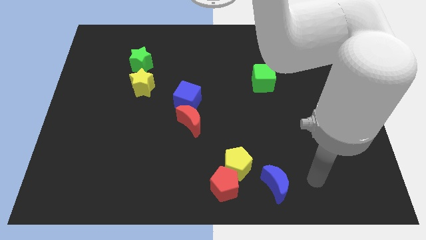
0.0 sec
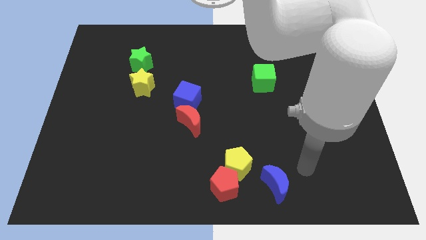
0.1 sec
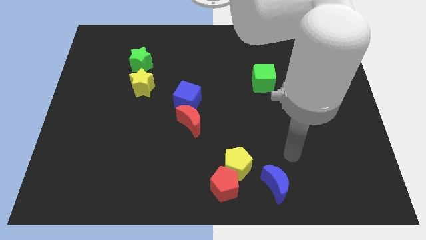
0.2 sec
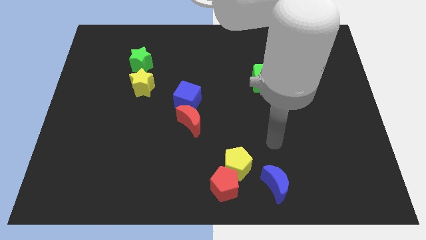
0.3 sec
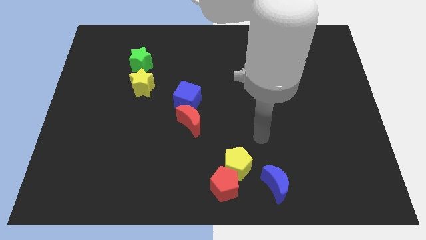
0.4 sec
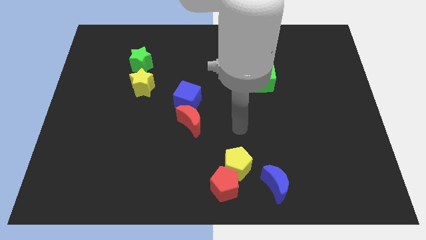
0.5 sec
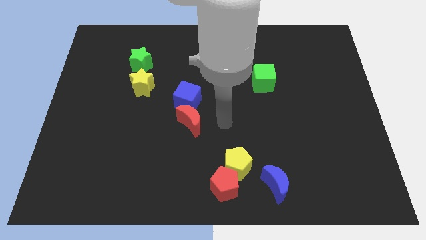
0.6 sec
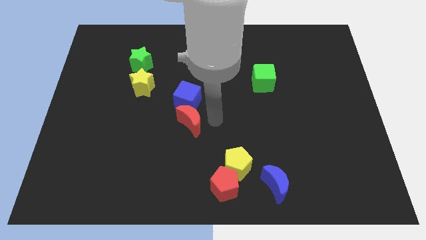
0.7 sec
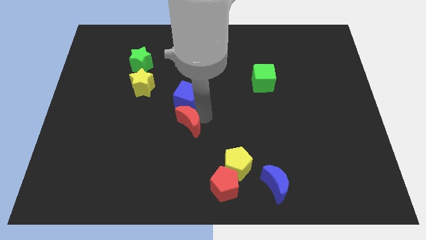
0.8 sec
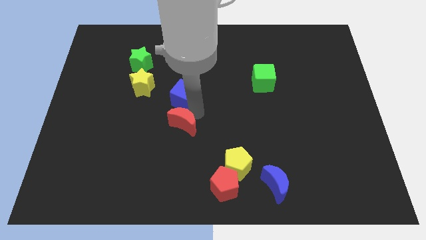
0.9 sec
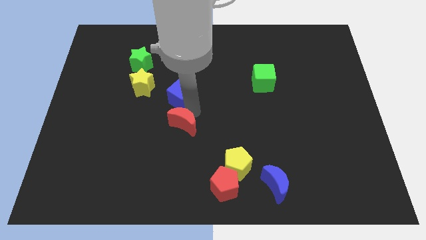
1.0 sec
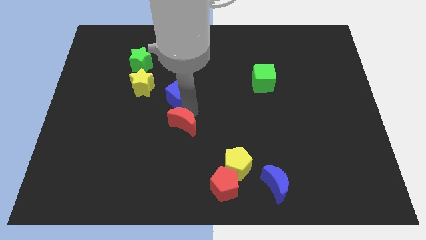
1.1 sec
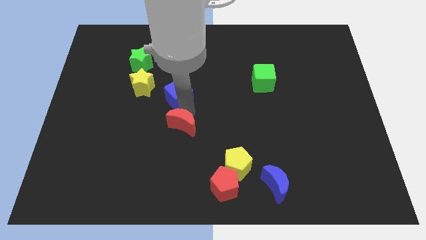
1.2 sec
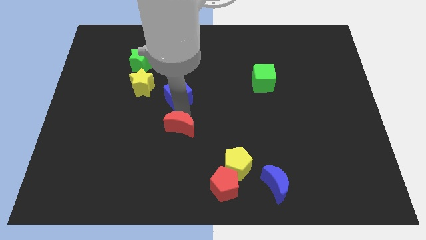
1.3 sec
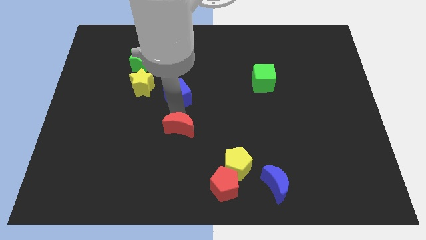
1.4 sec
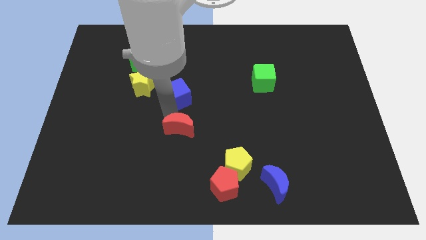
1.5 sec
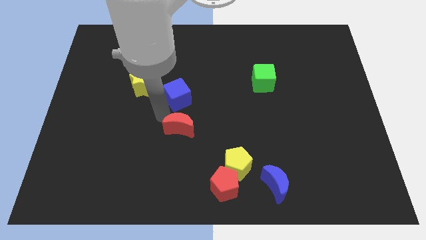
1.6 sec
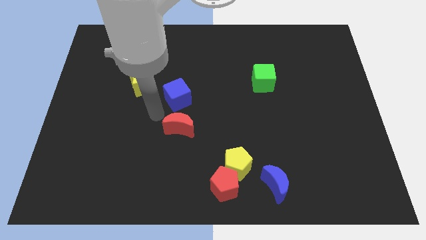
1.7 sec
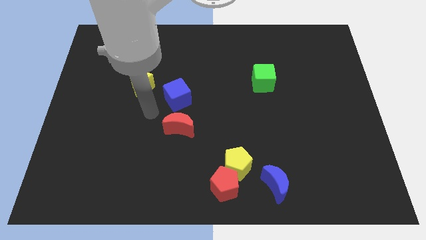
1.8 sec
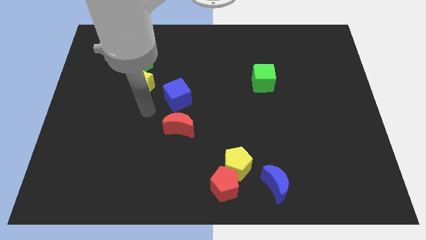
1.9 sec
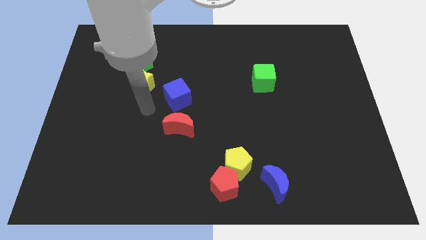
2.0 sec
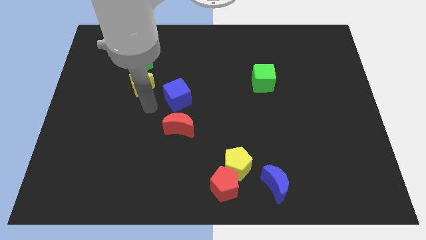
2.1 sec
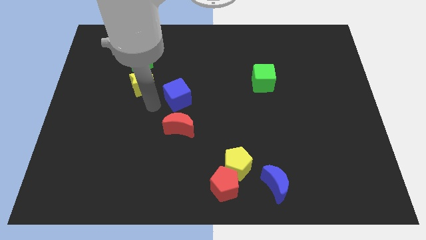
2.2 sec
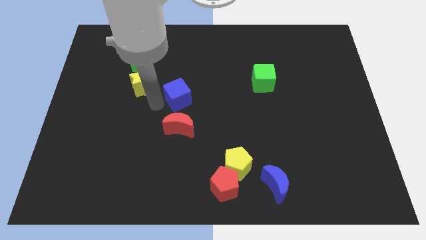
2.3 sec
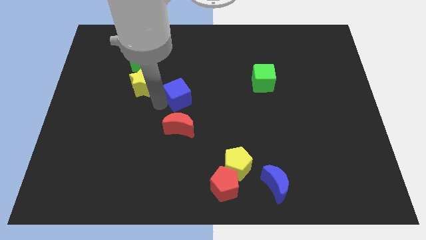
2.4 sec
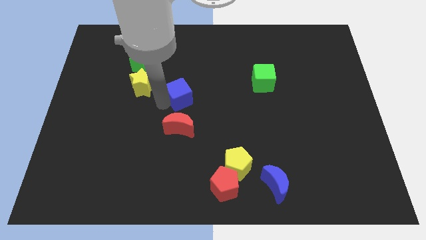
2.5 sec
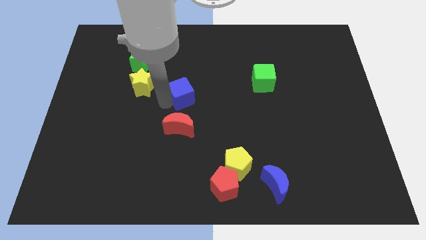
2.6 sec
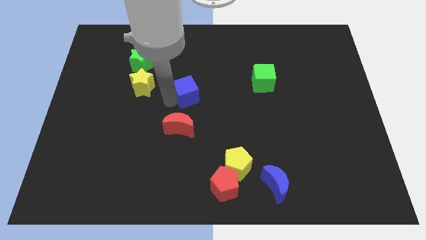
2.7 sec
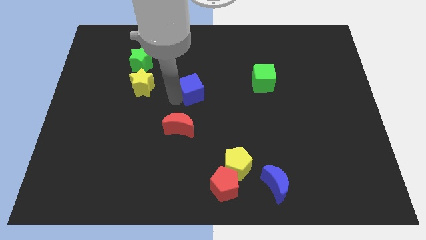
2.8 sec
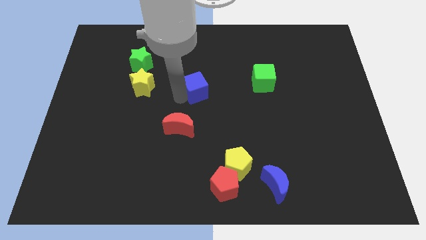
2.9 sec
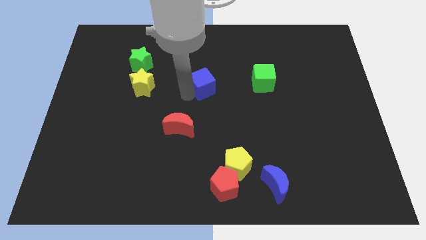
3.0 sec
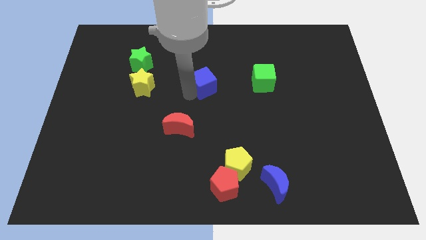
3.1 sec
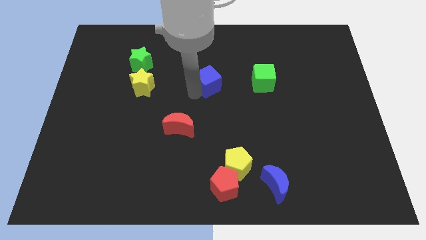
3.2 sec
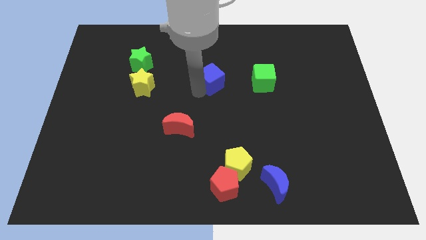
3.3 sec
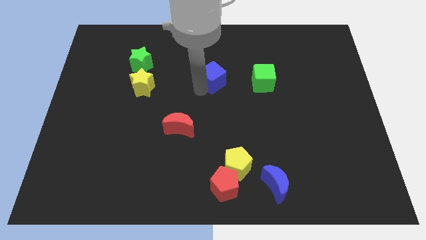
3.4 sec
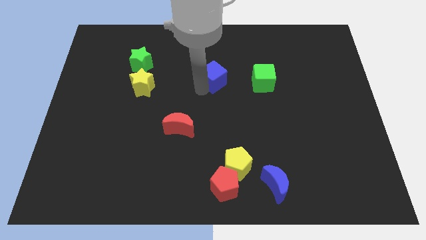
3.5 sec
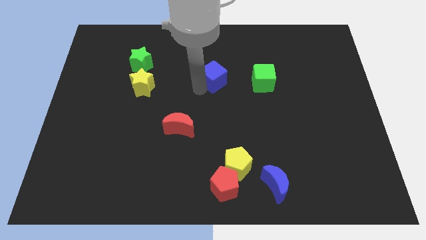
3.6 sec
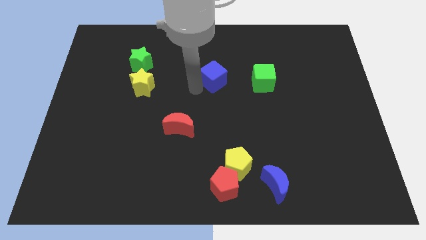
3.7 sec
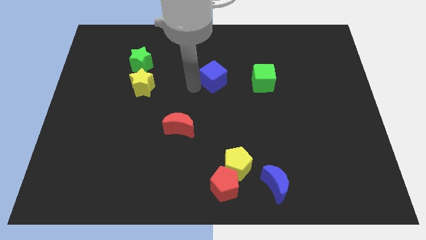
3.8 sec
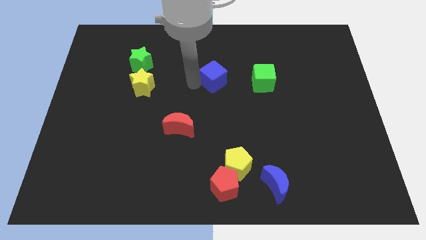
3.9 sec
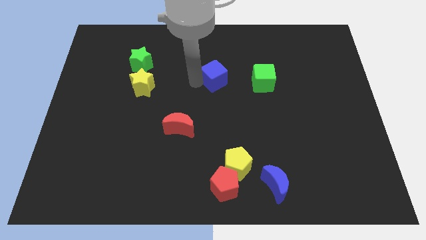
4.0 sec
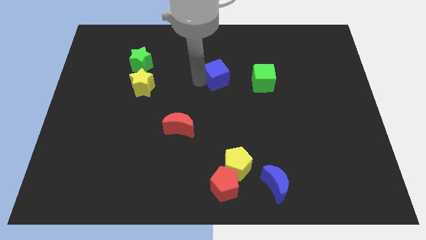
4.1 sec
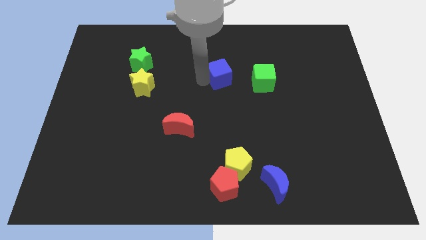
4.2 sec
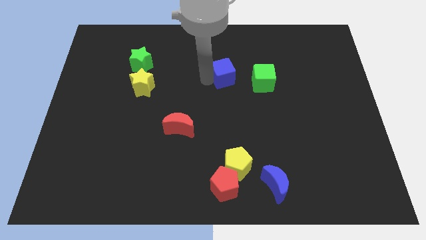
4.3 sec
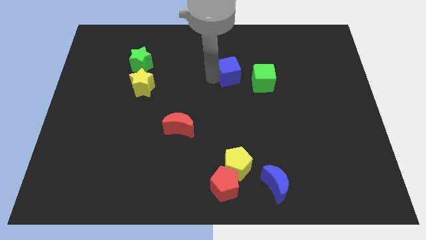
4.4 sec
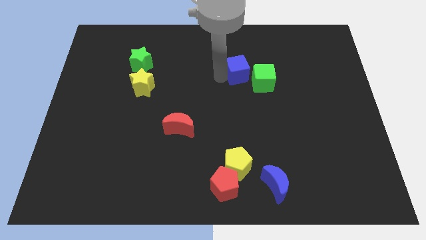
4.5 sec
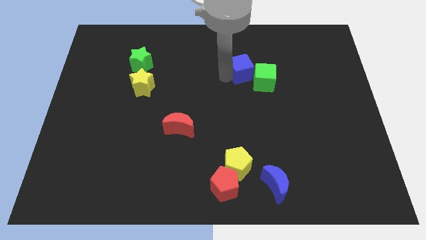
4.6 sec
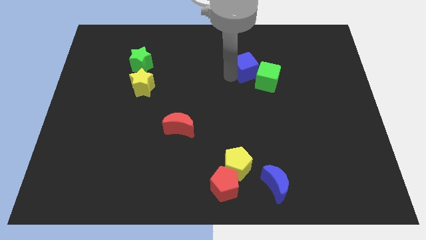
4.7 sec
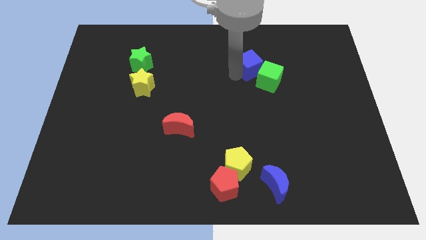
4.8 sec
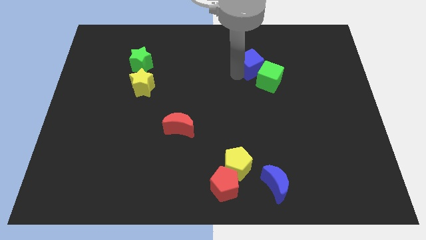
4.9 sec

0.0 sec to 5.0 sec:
move the blue cube to the green cube

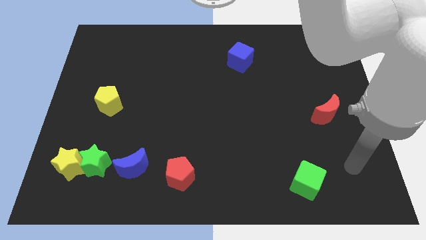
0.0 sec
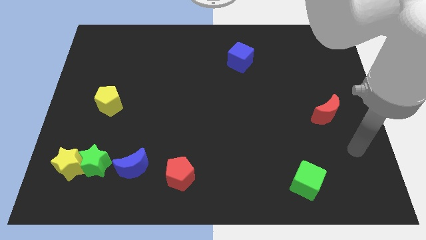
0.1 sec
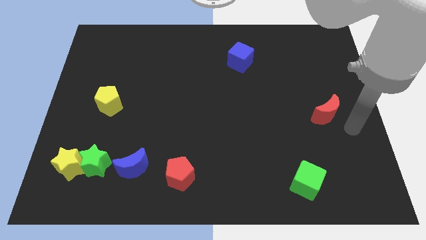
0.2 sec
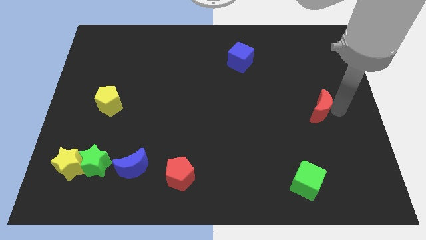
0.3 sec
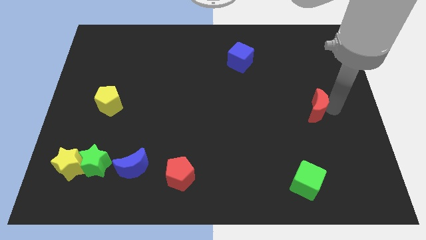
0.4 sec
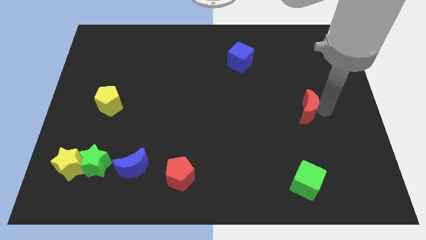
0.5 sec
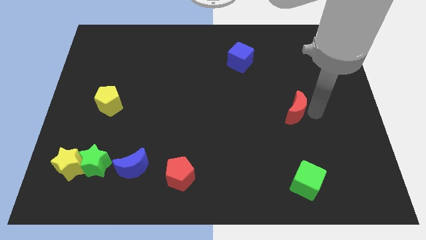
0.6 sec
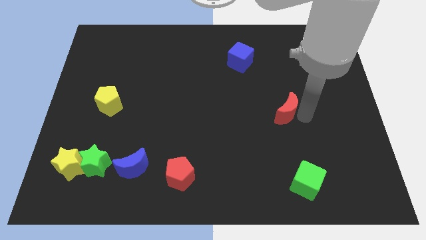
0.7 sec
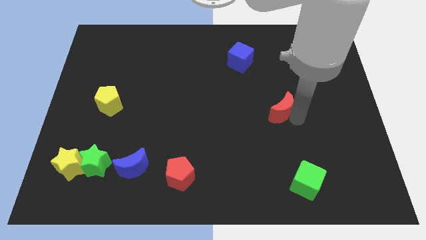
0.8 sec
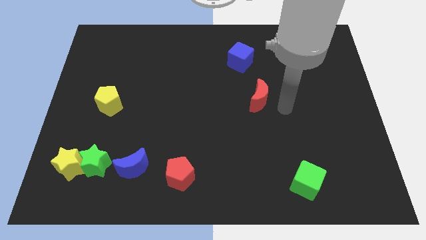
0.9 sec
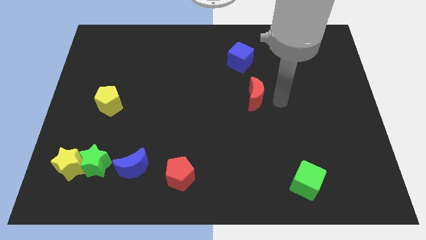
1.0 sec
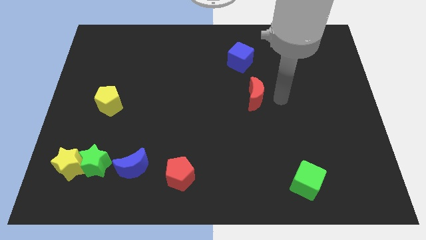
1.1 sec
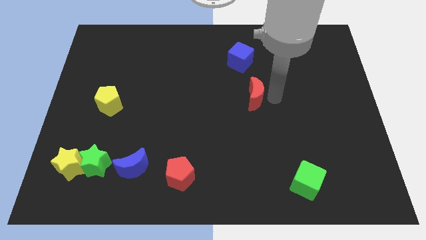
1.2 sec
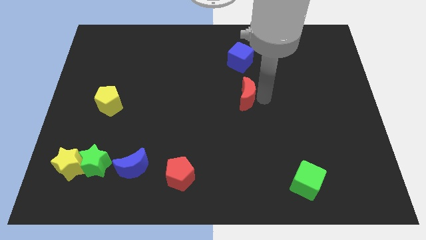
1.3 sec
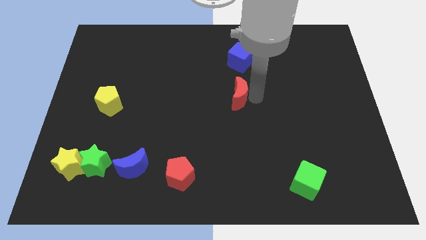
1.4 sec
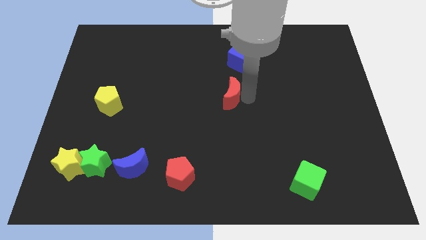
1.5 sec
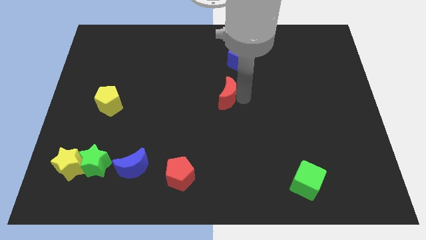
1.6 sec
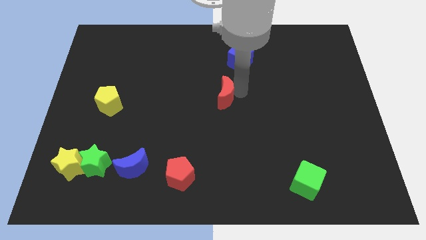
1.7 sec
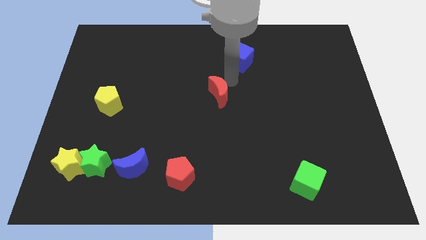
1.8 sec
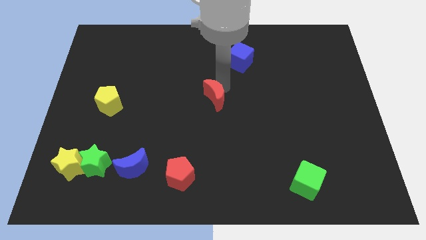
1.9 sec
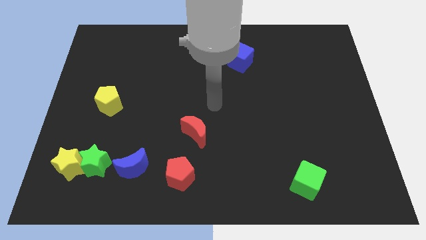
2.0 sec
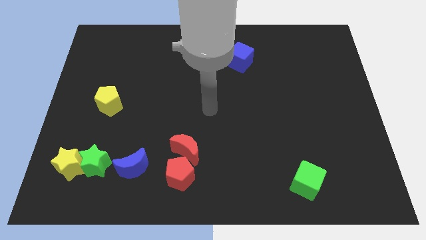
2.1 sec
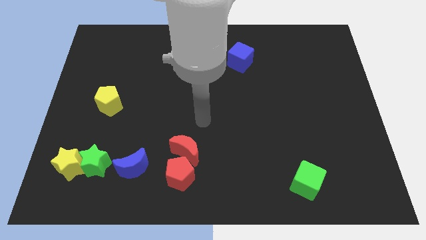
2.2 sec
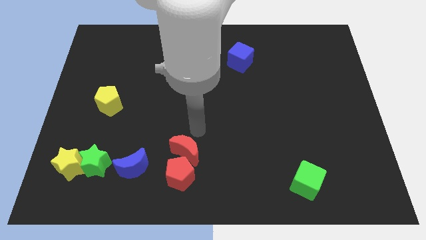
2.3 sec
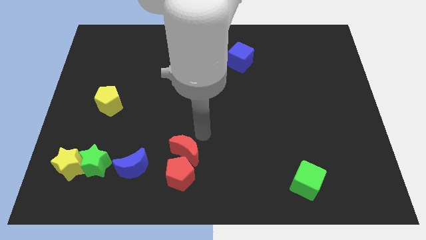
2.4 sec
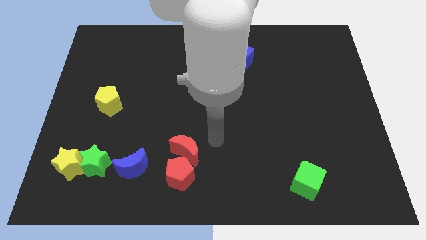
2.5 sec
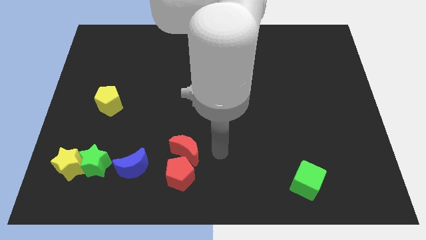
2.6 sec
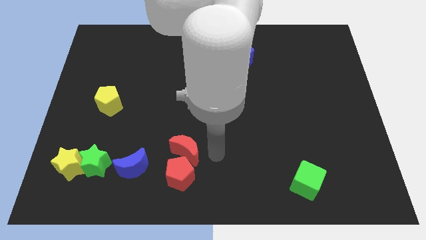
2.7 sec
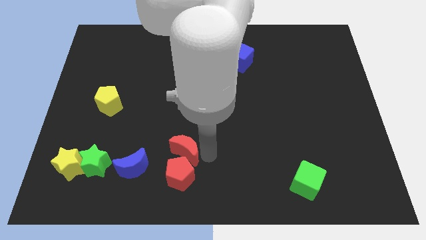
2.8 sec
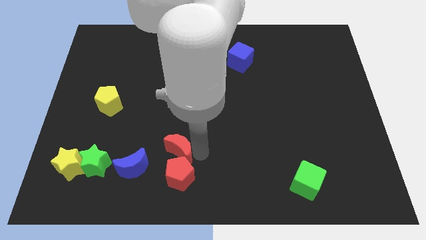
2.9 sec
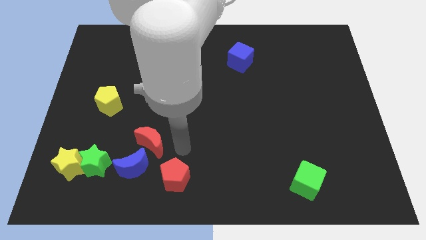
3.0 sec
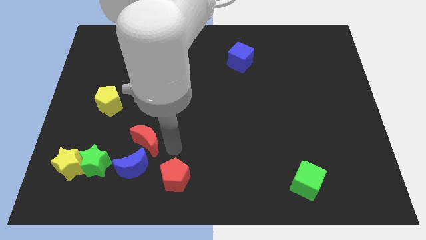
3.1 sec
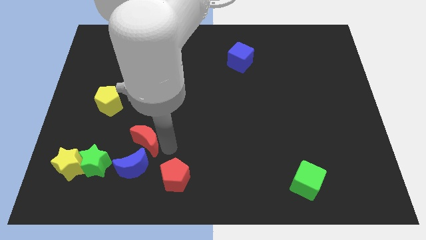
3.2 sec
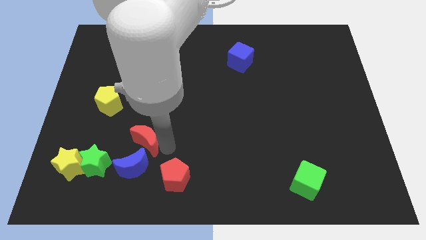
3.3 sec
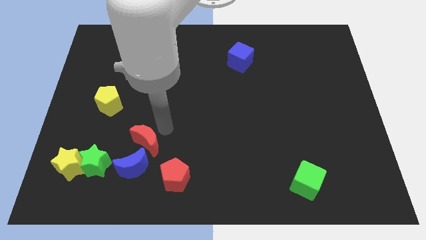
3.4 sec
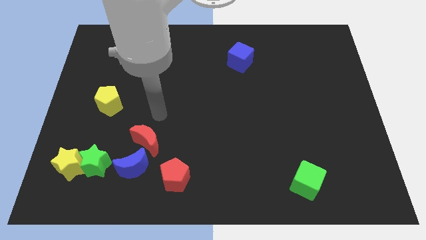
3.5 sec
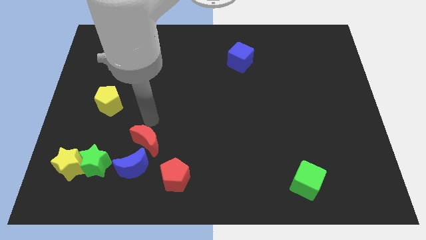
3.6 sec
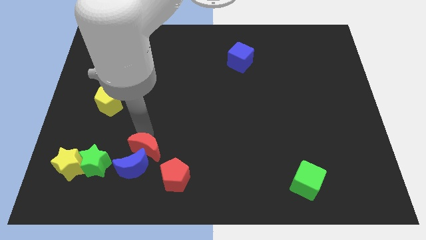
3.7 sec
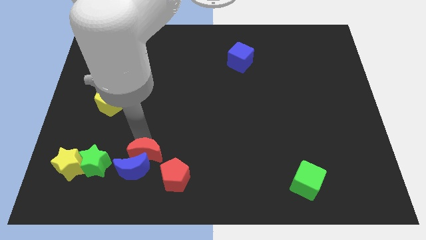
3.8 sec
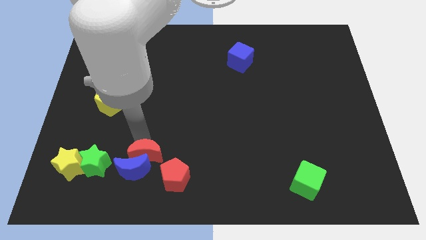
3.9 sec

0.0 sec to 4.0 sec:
move the red moon to the blue moon
